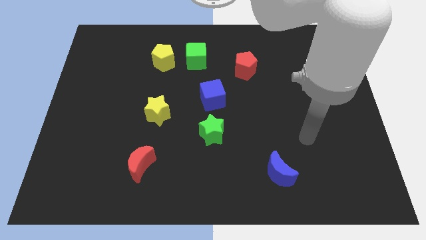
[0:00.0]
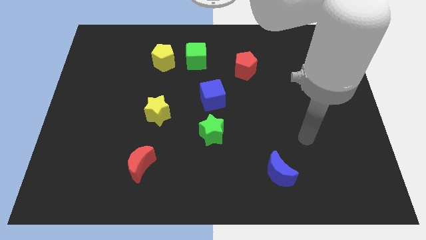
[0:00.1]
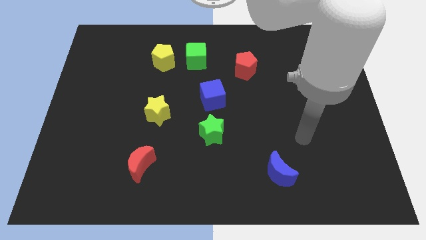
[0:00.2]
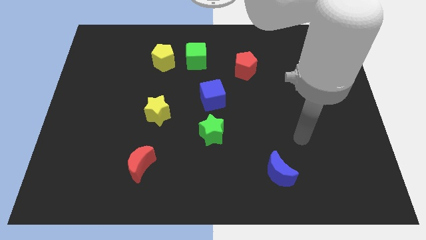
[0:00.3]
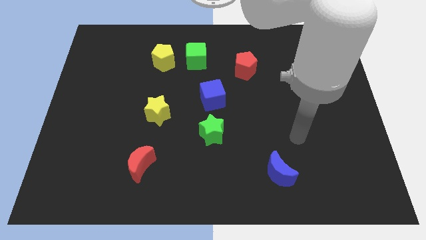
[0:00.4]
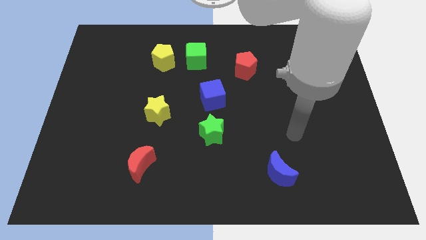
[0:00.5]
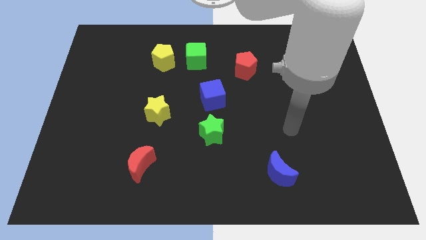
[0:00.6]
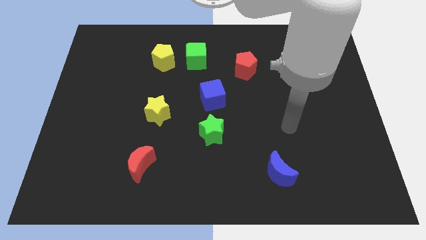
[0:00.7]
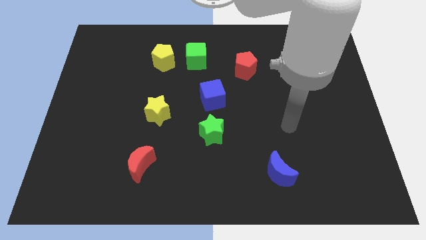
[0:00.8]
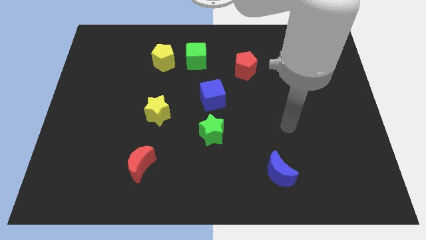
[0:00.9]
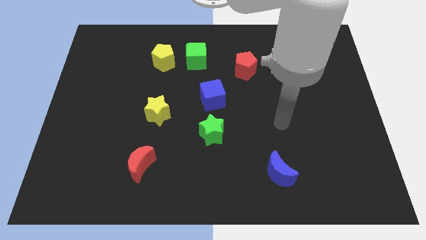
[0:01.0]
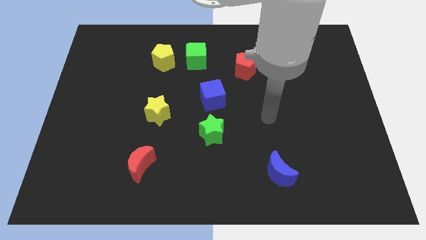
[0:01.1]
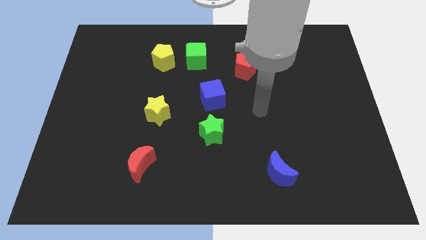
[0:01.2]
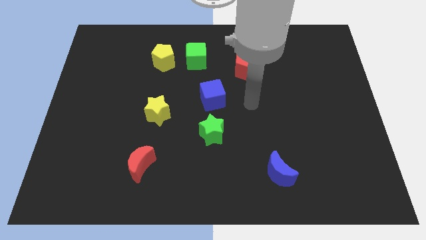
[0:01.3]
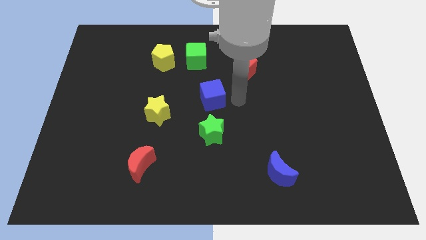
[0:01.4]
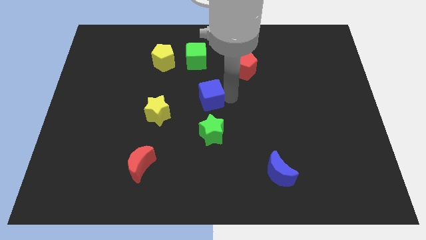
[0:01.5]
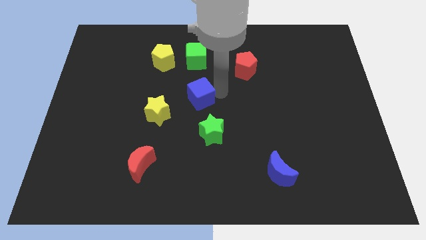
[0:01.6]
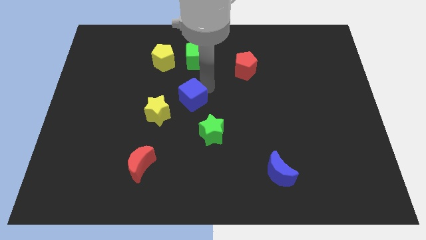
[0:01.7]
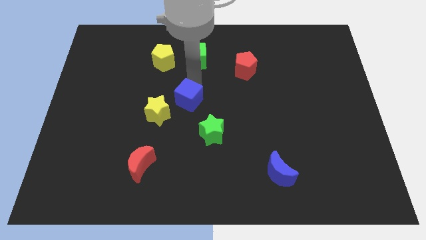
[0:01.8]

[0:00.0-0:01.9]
move the blue cube diagonally top right to the yellow star

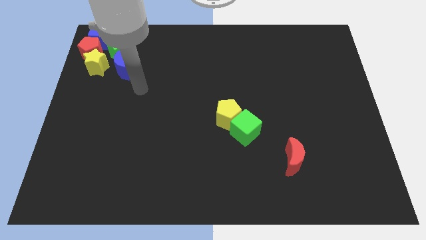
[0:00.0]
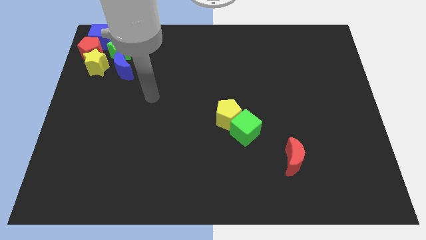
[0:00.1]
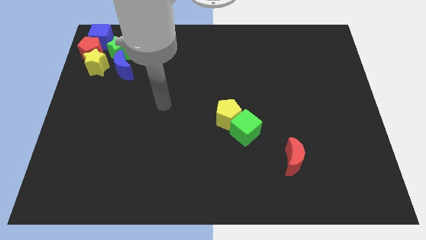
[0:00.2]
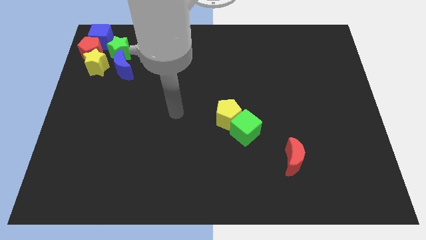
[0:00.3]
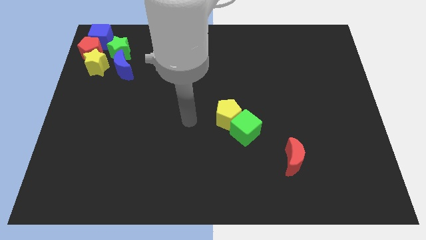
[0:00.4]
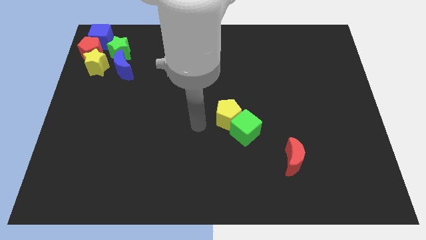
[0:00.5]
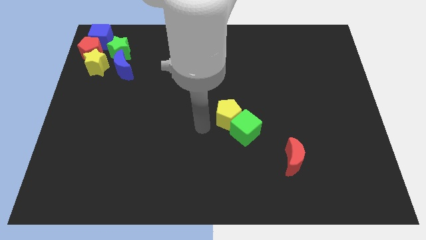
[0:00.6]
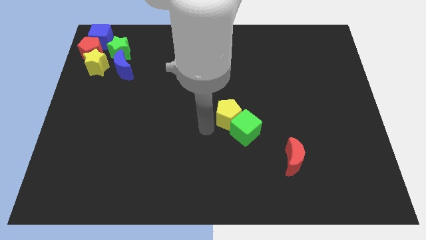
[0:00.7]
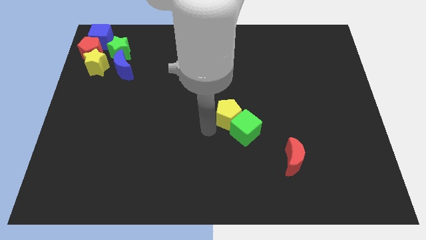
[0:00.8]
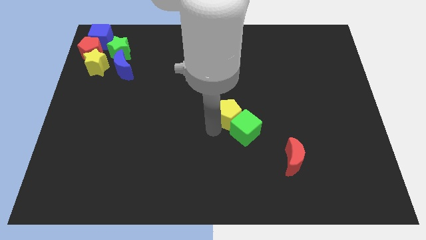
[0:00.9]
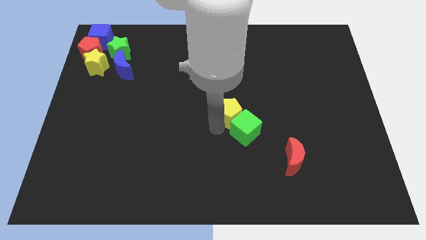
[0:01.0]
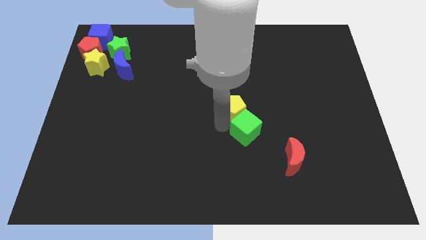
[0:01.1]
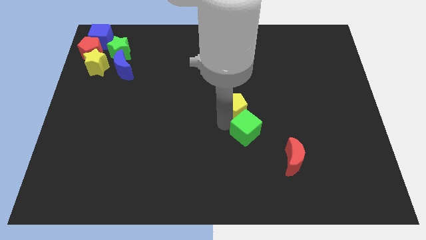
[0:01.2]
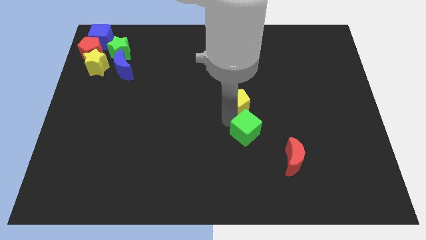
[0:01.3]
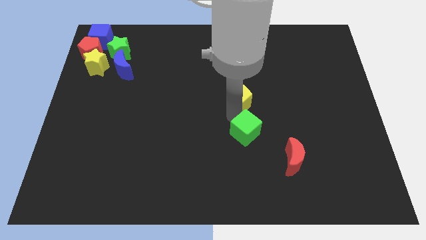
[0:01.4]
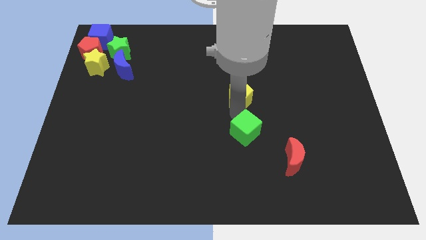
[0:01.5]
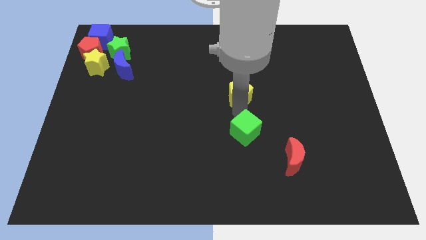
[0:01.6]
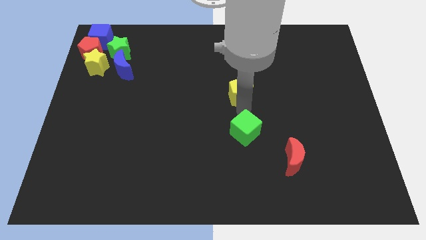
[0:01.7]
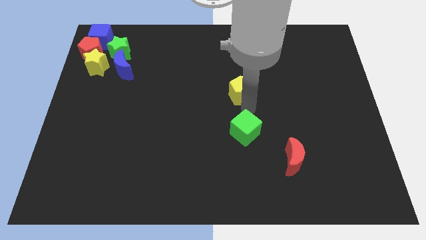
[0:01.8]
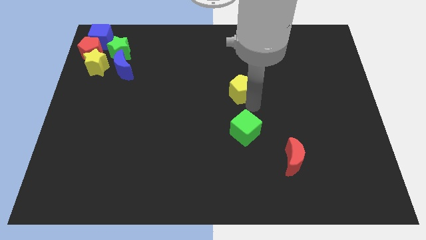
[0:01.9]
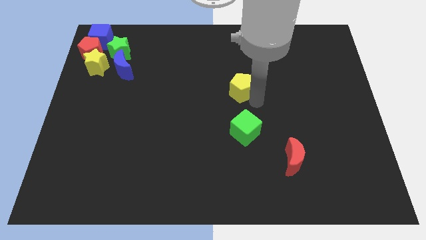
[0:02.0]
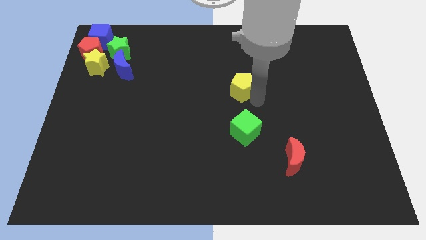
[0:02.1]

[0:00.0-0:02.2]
separate the yellow pentagon from the green cube

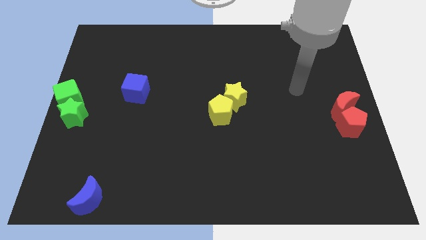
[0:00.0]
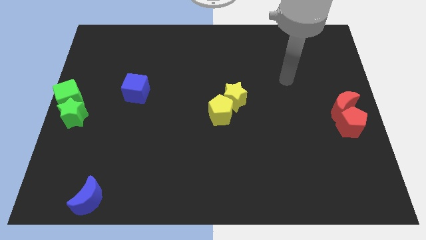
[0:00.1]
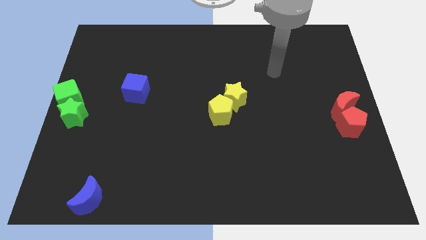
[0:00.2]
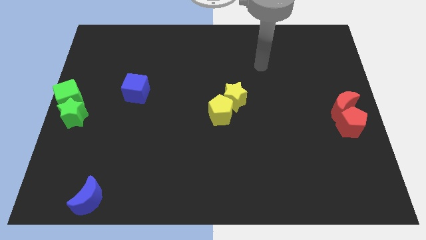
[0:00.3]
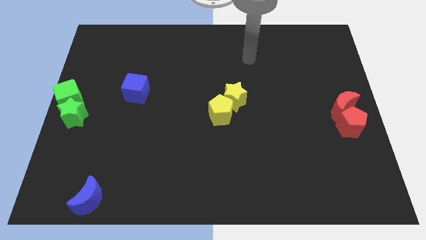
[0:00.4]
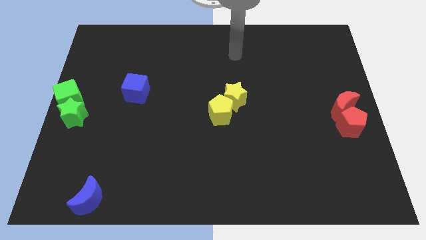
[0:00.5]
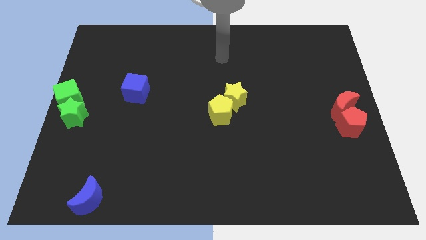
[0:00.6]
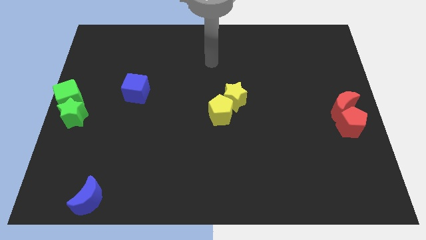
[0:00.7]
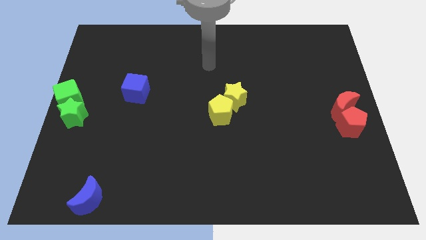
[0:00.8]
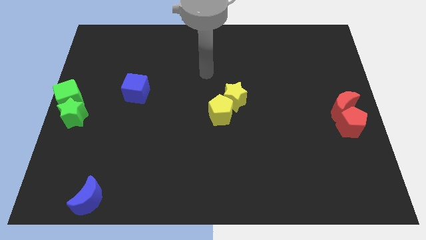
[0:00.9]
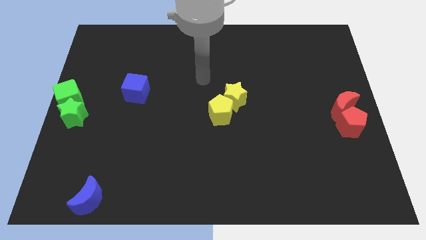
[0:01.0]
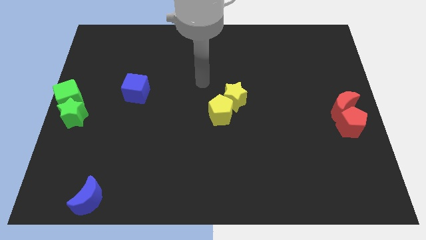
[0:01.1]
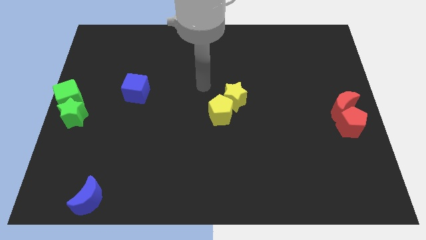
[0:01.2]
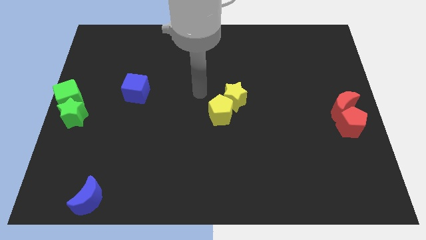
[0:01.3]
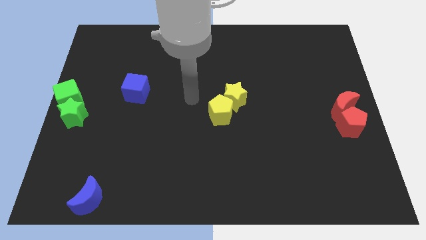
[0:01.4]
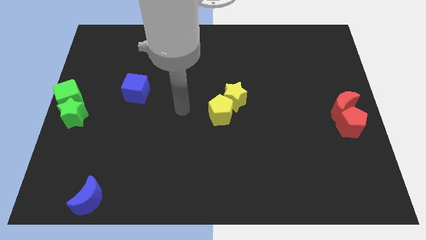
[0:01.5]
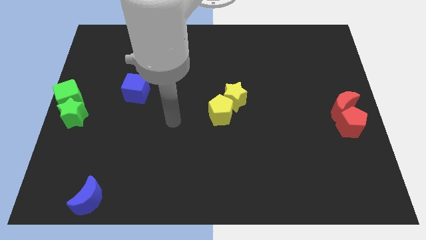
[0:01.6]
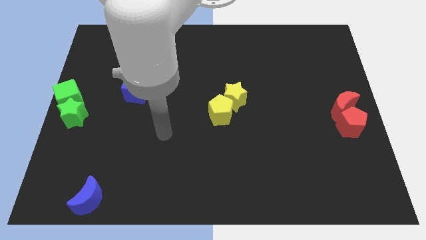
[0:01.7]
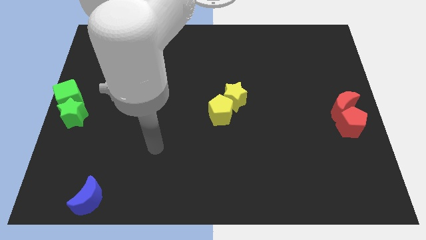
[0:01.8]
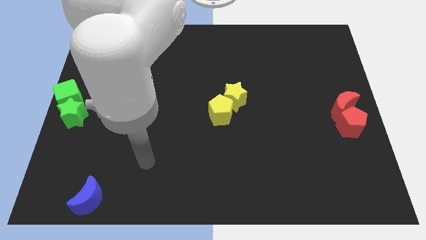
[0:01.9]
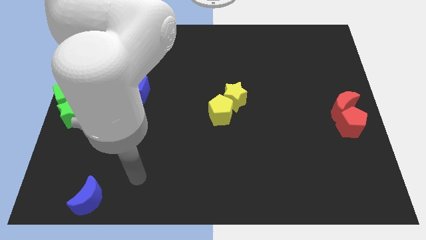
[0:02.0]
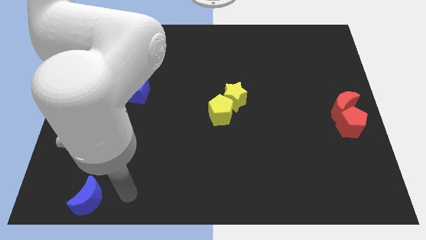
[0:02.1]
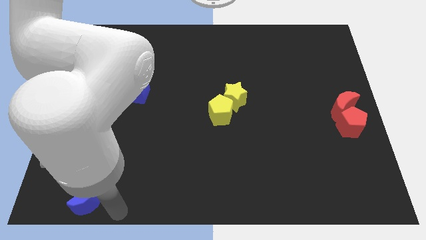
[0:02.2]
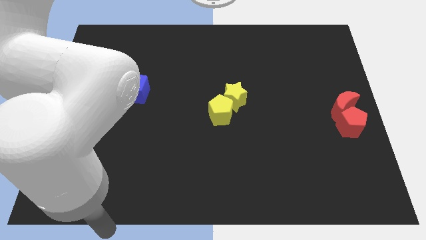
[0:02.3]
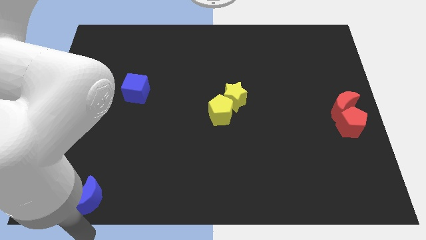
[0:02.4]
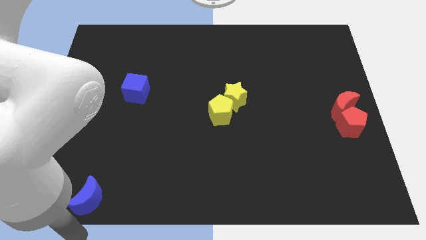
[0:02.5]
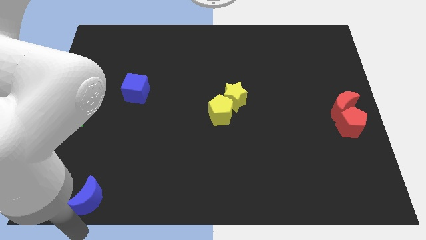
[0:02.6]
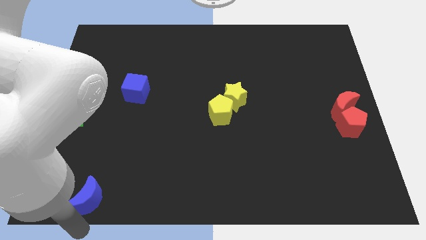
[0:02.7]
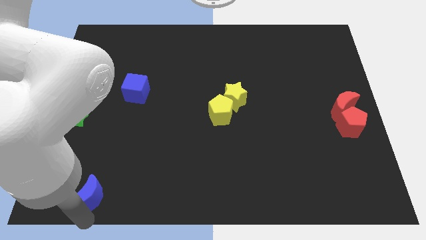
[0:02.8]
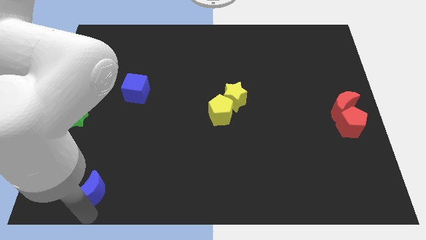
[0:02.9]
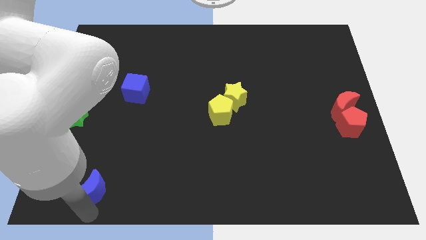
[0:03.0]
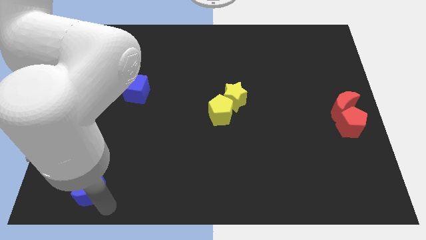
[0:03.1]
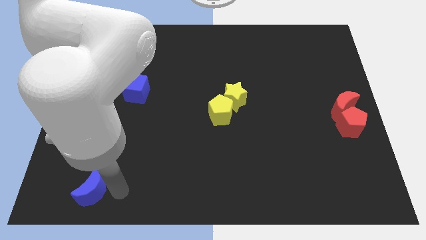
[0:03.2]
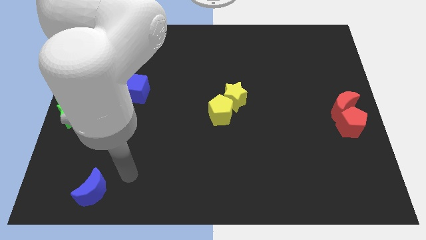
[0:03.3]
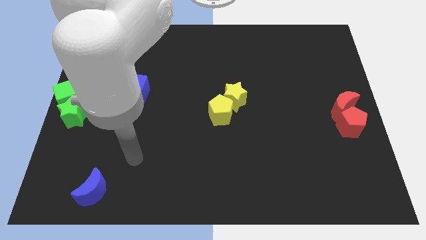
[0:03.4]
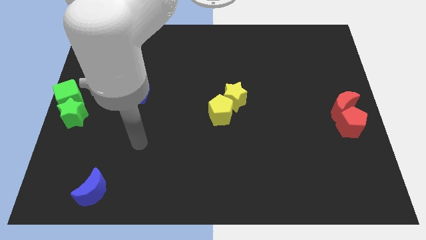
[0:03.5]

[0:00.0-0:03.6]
move the blue moon slightly up

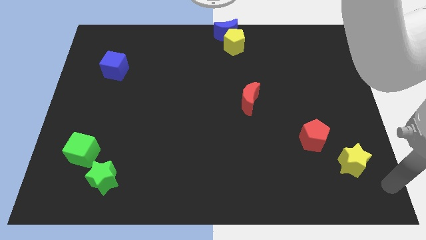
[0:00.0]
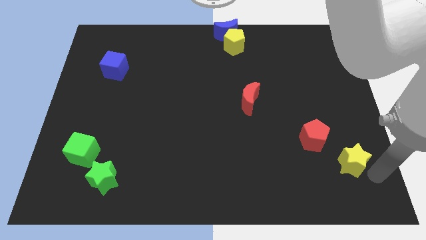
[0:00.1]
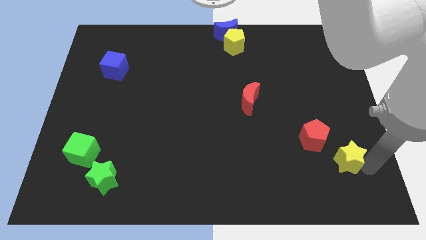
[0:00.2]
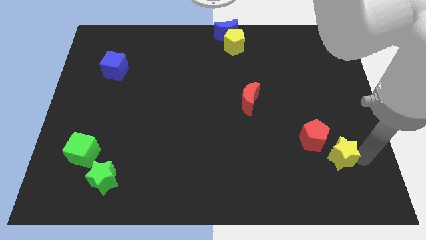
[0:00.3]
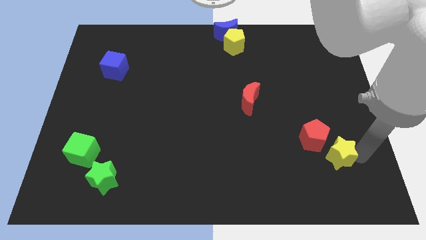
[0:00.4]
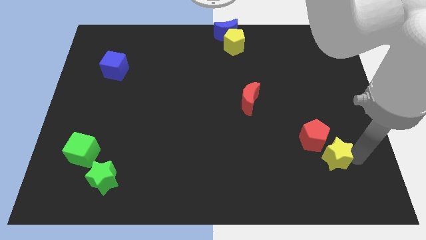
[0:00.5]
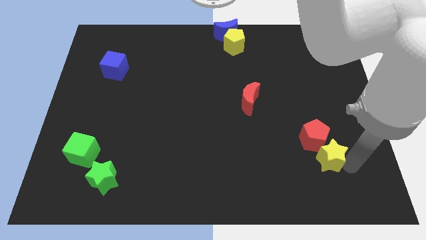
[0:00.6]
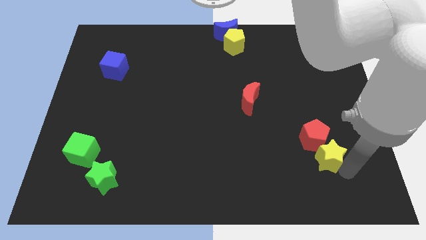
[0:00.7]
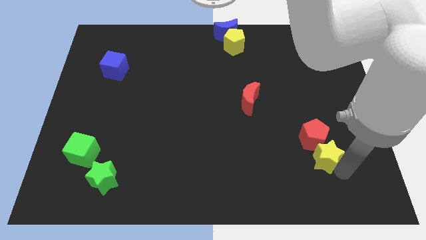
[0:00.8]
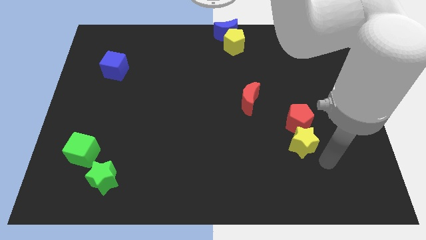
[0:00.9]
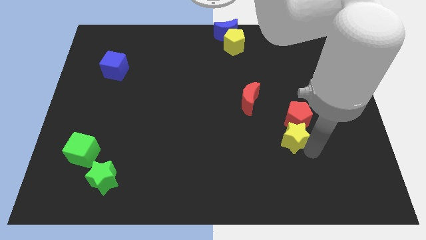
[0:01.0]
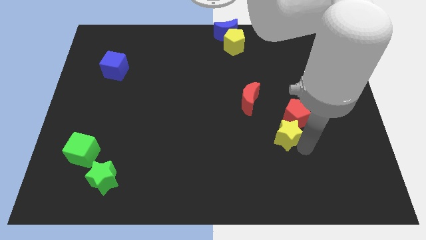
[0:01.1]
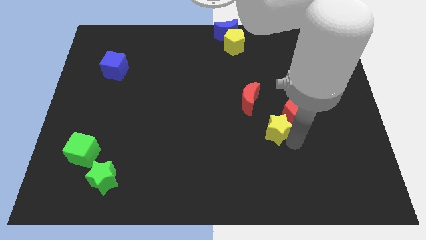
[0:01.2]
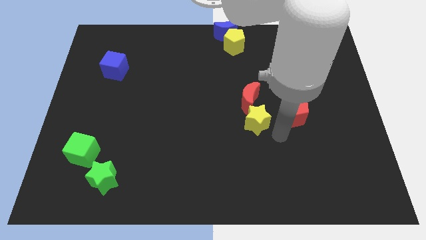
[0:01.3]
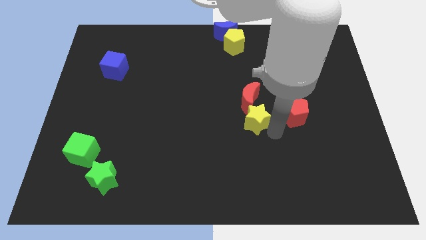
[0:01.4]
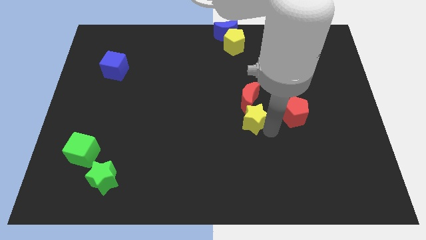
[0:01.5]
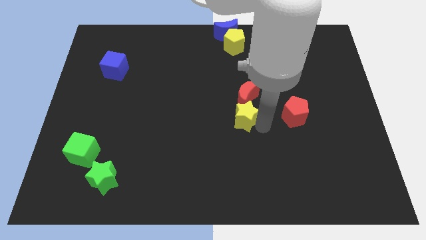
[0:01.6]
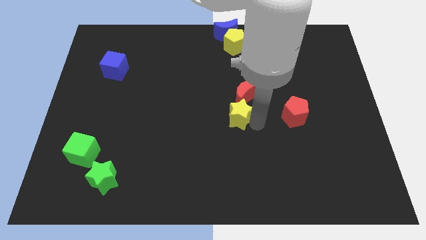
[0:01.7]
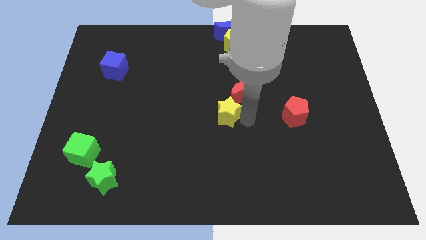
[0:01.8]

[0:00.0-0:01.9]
move the yellow star into the red moon
